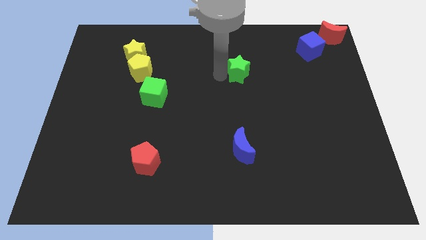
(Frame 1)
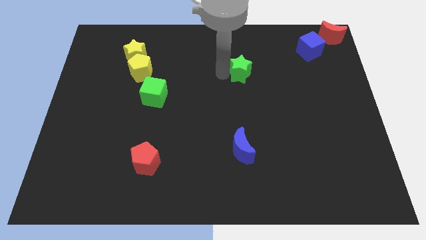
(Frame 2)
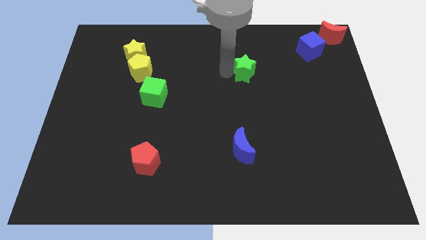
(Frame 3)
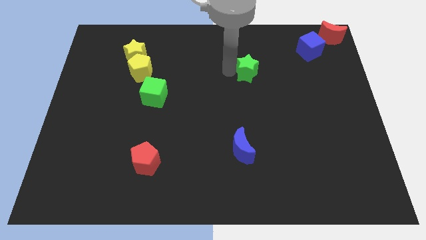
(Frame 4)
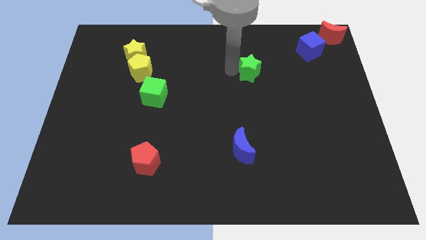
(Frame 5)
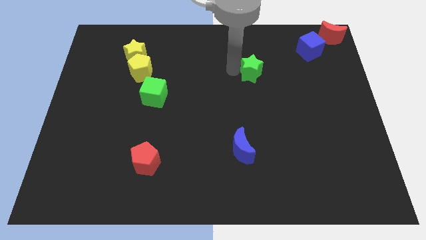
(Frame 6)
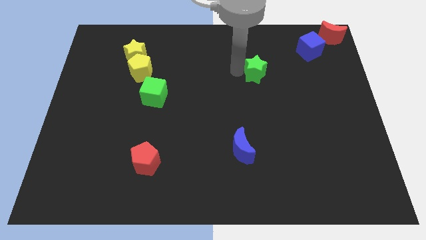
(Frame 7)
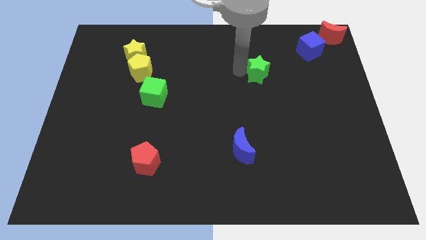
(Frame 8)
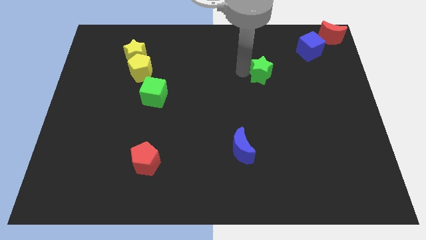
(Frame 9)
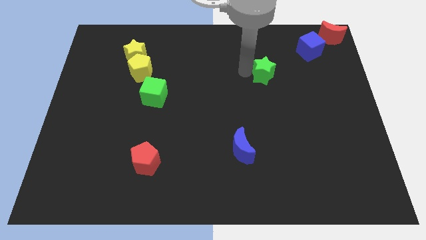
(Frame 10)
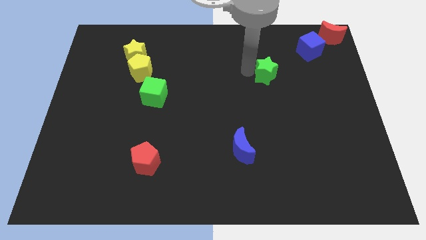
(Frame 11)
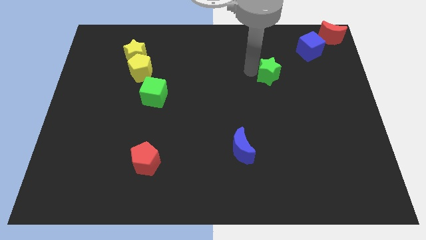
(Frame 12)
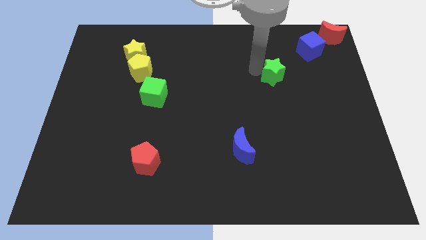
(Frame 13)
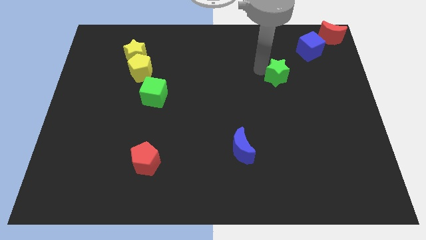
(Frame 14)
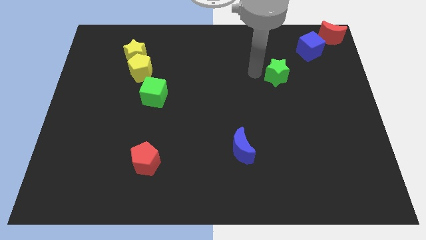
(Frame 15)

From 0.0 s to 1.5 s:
push the green star towards the diagonal bottom left of the blue cube

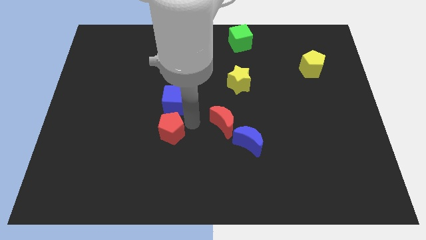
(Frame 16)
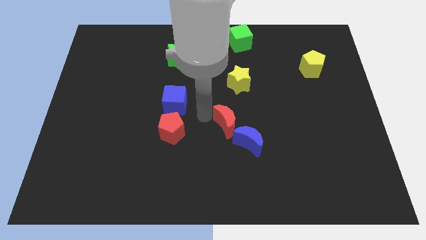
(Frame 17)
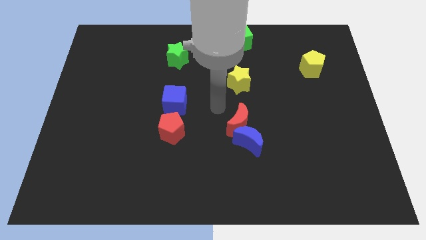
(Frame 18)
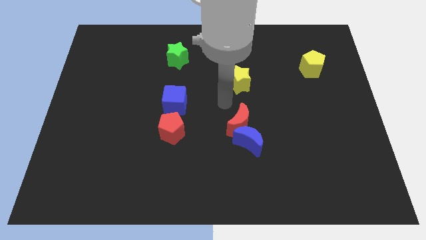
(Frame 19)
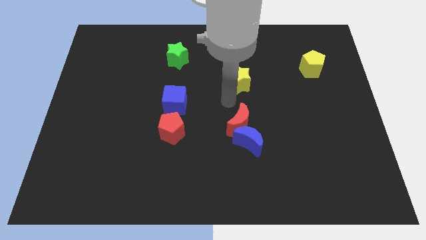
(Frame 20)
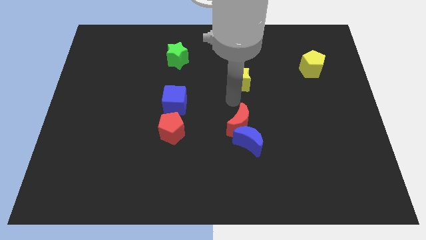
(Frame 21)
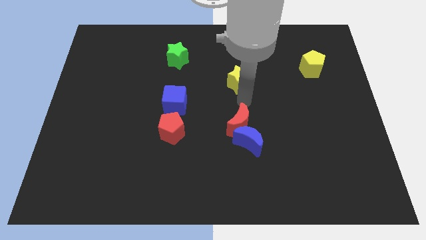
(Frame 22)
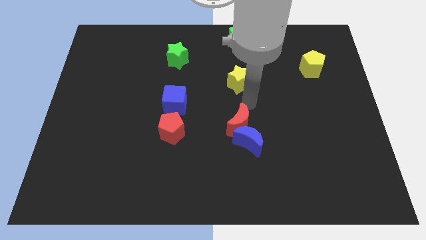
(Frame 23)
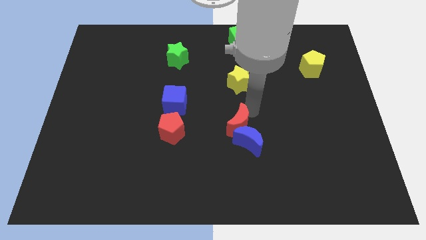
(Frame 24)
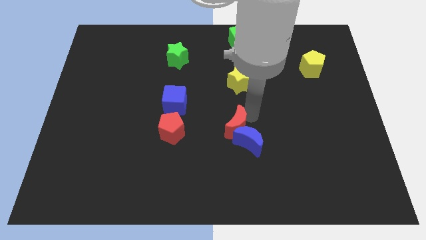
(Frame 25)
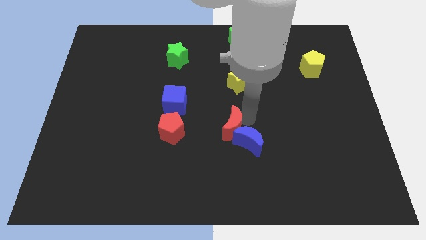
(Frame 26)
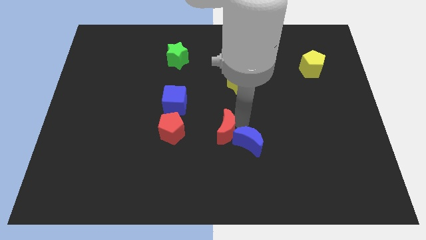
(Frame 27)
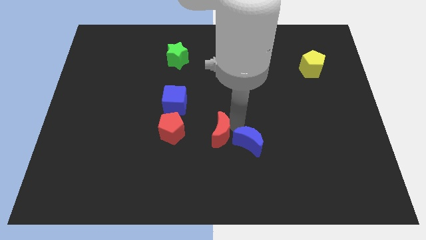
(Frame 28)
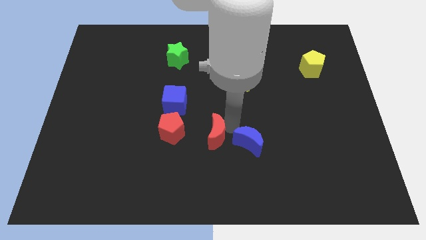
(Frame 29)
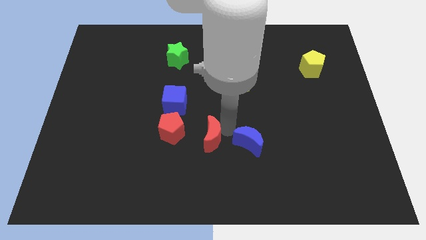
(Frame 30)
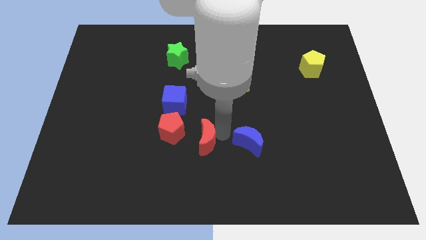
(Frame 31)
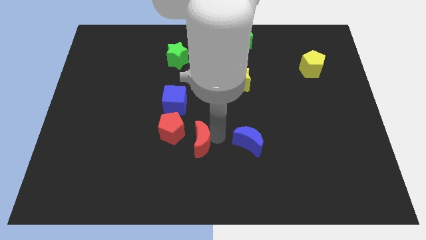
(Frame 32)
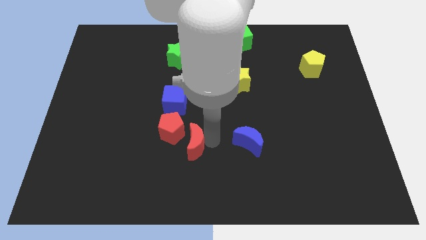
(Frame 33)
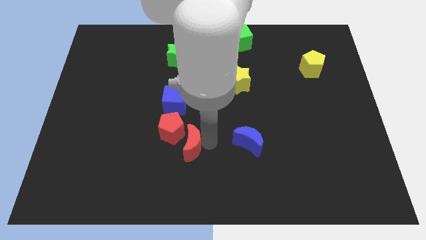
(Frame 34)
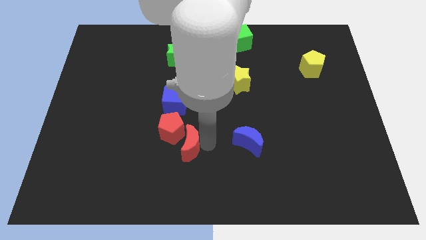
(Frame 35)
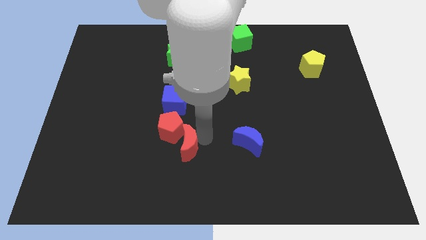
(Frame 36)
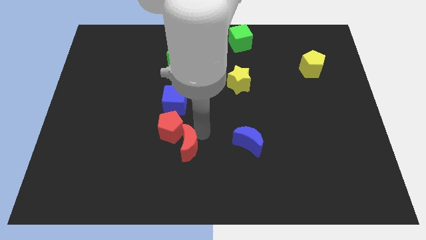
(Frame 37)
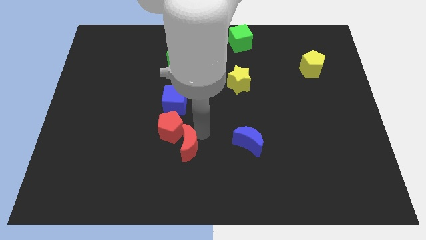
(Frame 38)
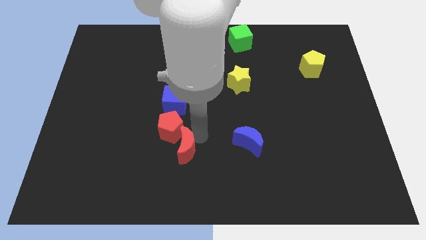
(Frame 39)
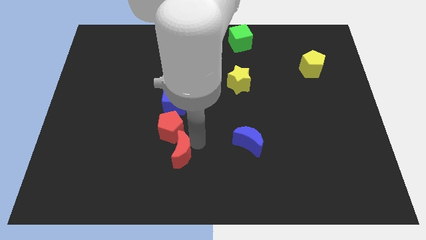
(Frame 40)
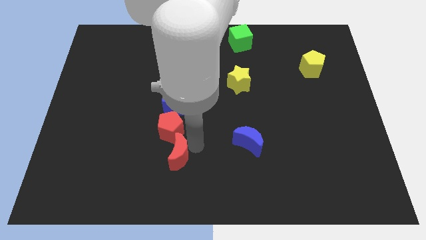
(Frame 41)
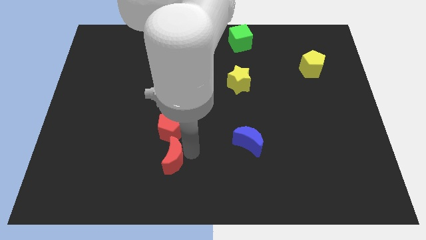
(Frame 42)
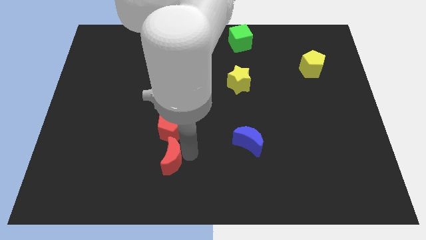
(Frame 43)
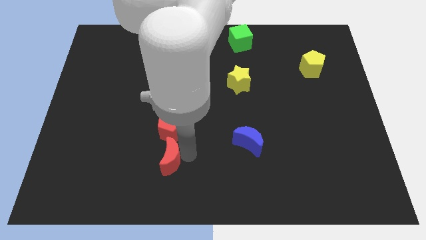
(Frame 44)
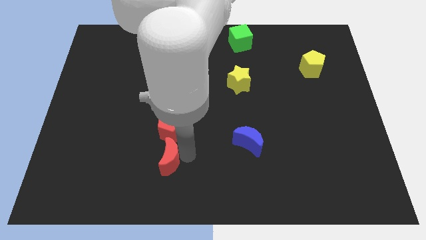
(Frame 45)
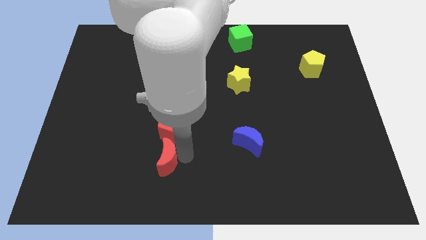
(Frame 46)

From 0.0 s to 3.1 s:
slide the red crescent to the bottom side of the red pentagon

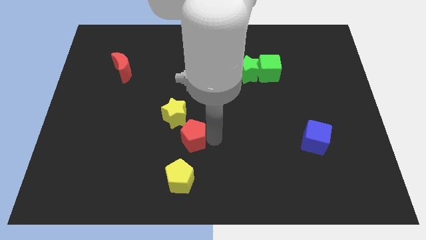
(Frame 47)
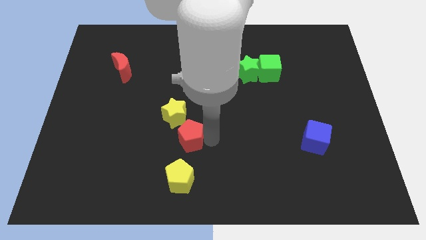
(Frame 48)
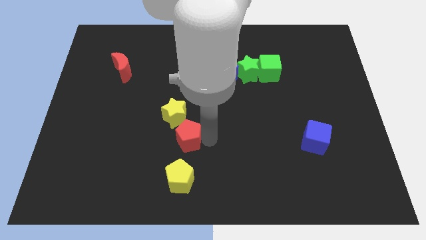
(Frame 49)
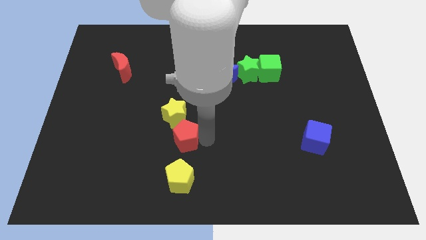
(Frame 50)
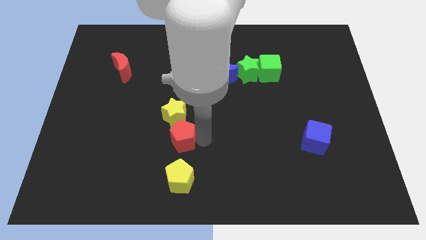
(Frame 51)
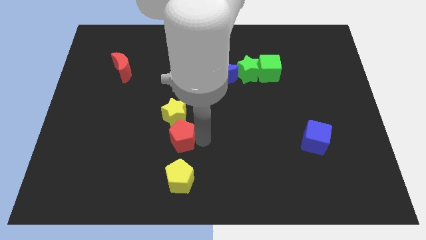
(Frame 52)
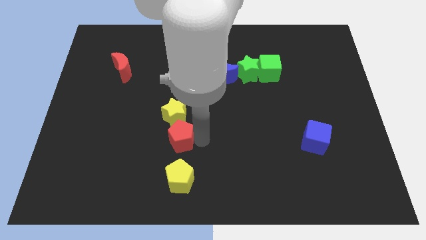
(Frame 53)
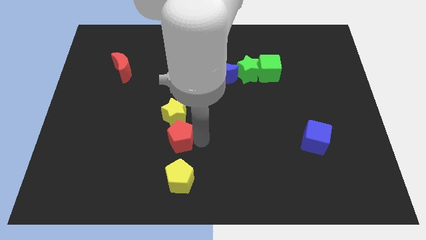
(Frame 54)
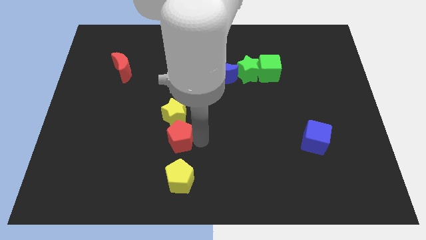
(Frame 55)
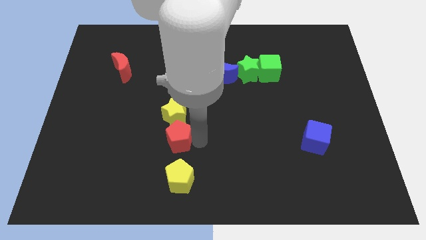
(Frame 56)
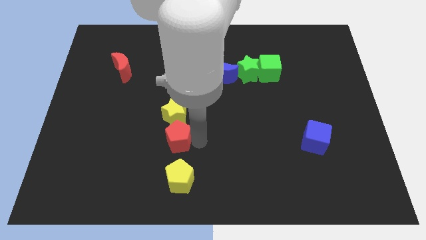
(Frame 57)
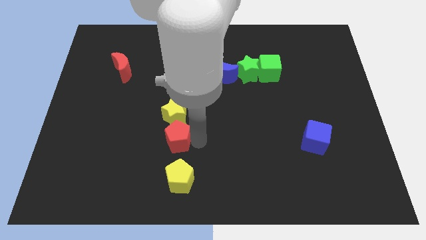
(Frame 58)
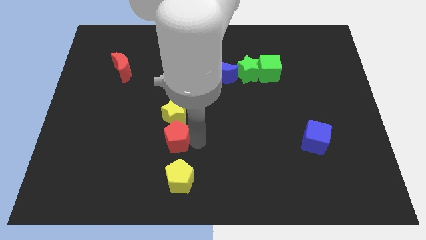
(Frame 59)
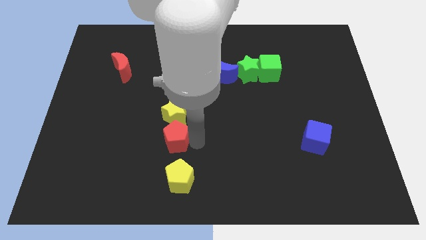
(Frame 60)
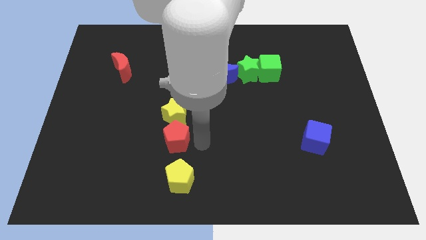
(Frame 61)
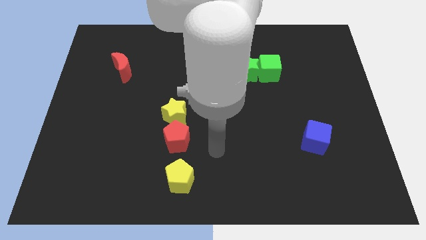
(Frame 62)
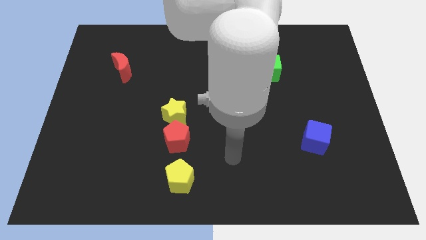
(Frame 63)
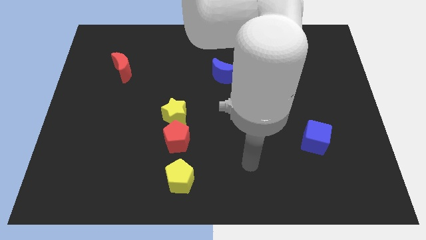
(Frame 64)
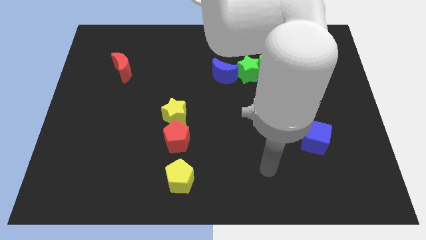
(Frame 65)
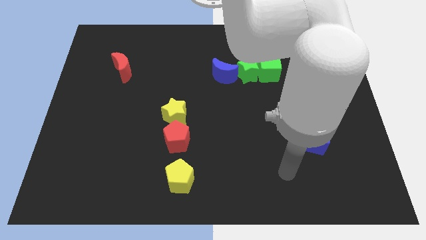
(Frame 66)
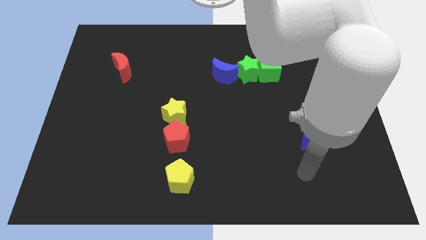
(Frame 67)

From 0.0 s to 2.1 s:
move the red pentagon in between the yellow blocks

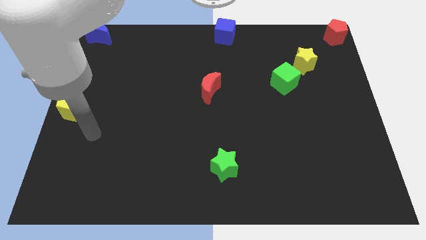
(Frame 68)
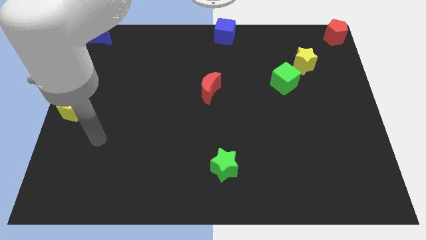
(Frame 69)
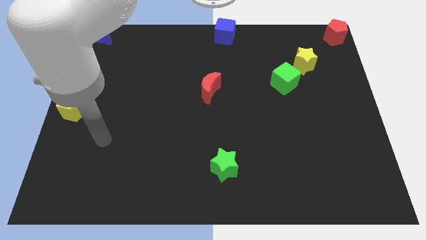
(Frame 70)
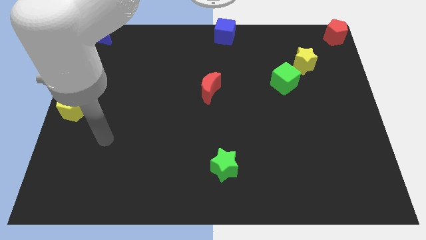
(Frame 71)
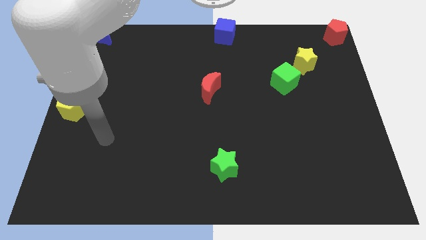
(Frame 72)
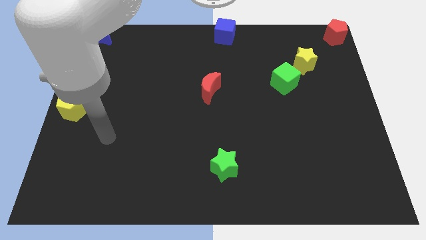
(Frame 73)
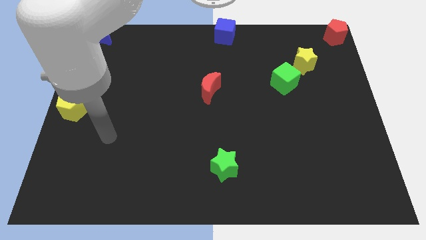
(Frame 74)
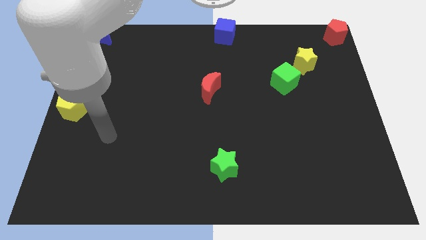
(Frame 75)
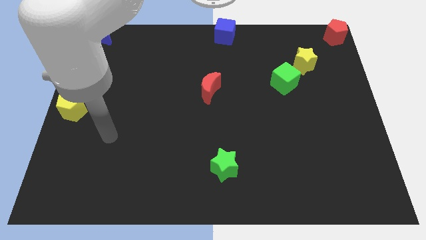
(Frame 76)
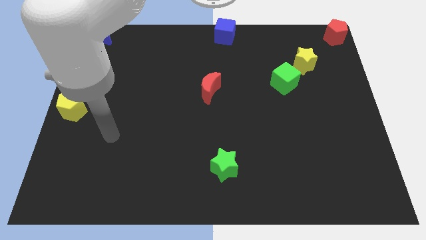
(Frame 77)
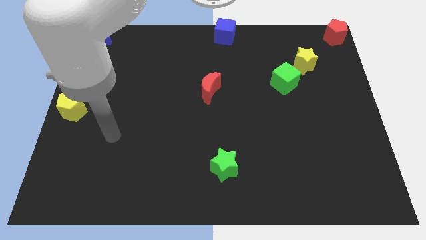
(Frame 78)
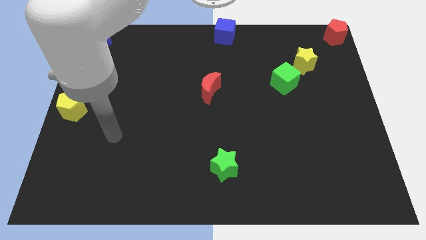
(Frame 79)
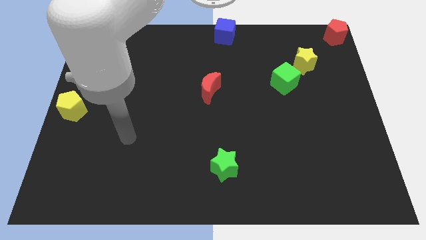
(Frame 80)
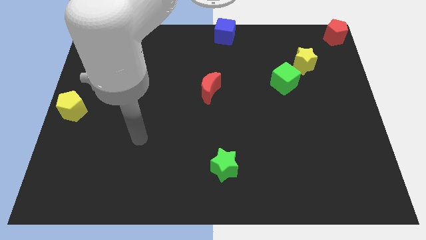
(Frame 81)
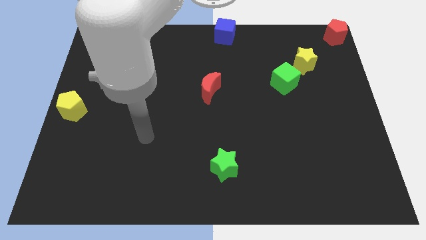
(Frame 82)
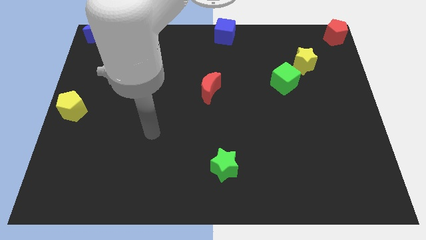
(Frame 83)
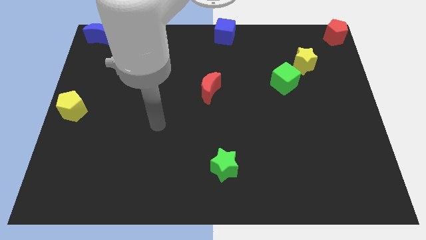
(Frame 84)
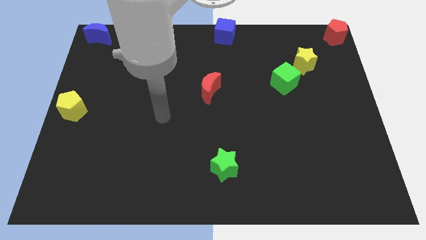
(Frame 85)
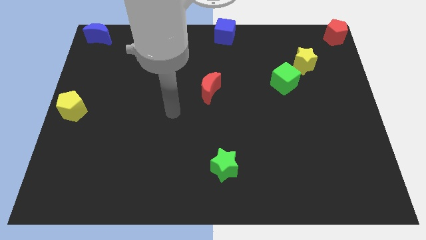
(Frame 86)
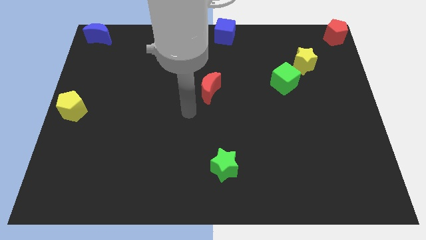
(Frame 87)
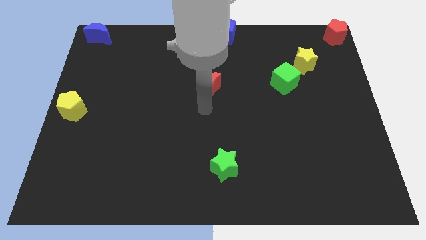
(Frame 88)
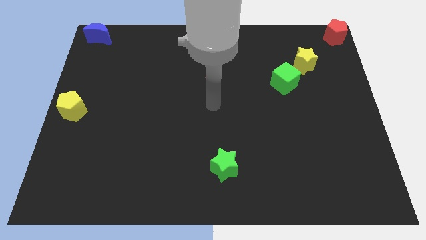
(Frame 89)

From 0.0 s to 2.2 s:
move the arm to the bottom of the red moon
